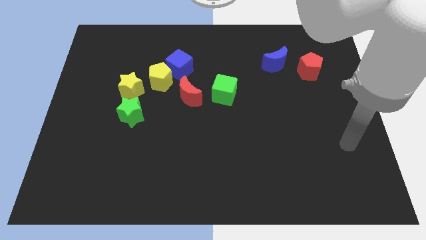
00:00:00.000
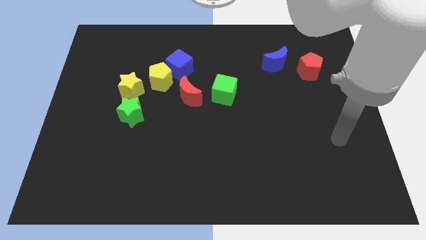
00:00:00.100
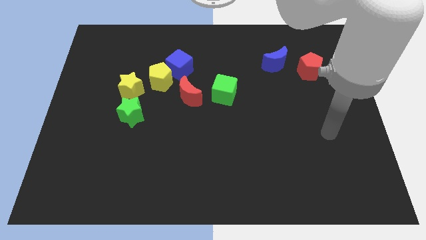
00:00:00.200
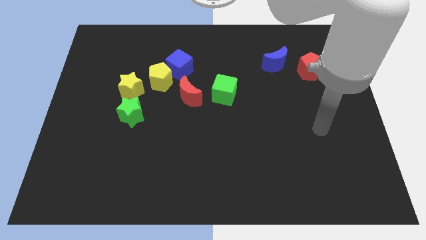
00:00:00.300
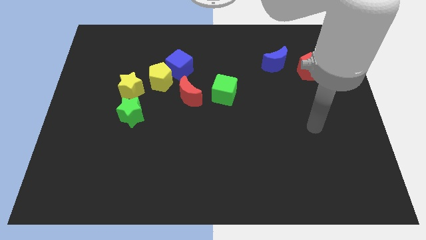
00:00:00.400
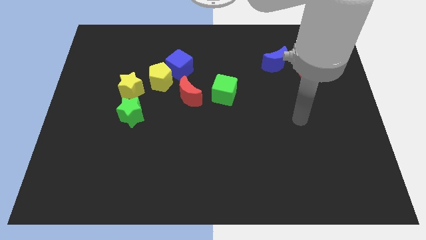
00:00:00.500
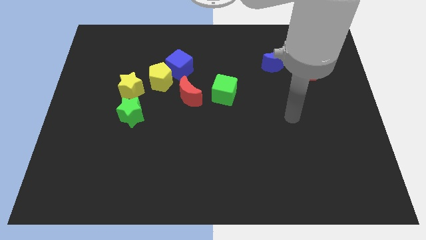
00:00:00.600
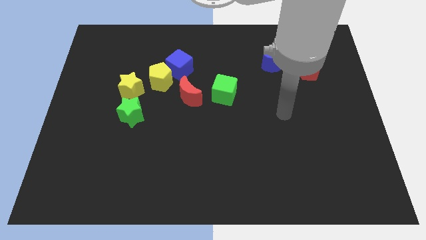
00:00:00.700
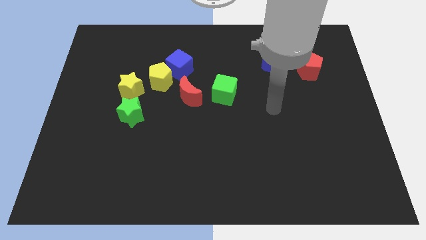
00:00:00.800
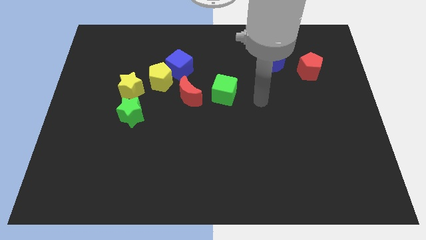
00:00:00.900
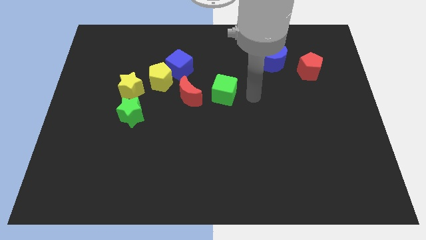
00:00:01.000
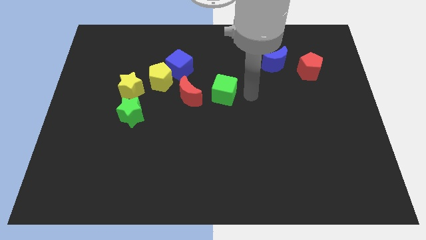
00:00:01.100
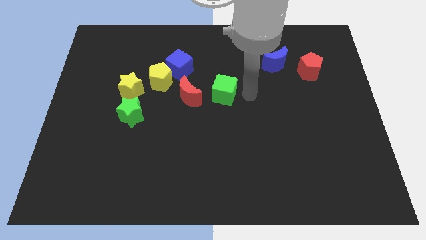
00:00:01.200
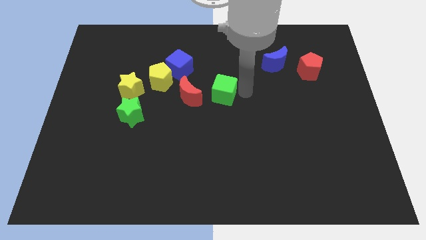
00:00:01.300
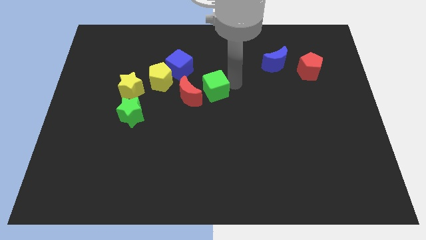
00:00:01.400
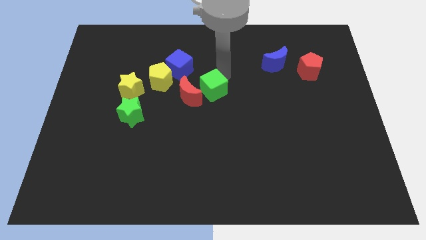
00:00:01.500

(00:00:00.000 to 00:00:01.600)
move the green cube slightly to the left

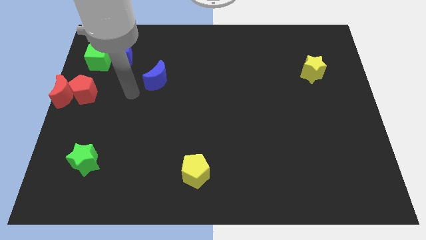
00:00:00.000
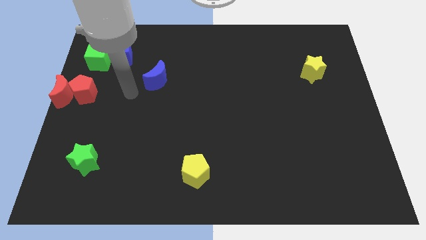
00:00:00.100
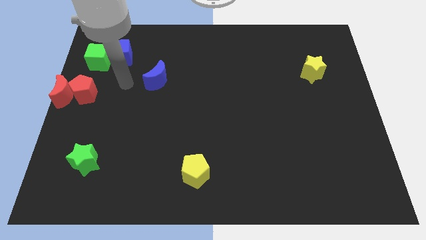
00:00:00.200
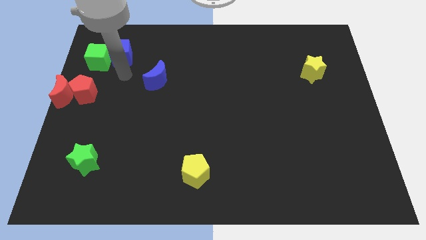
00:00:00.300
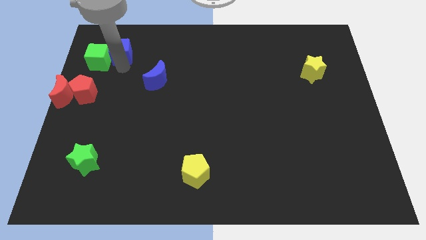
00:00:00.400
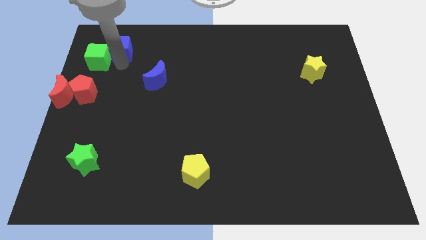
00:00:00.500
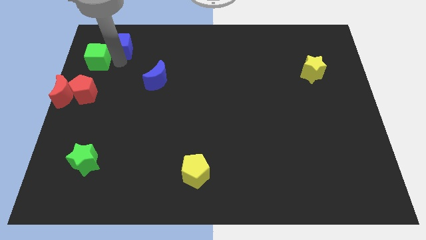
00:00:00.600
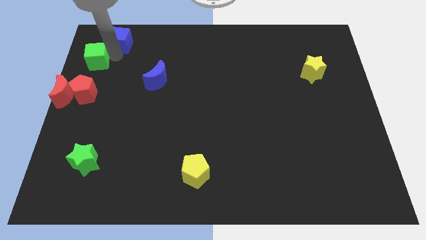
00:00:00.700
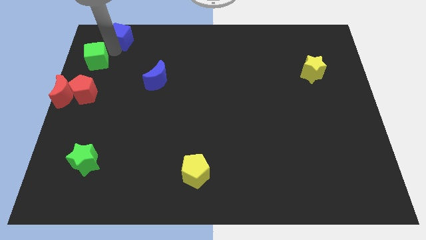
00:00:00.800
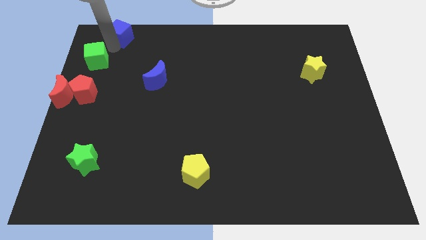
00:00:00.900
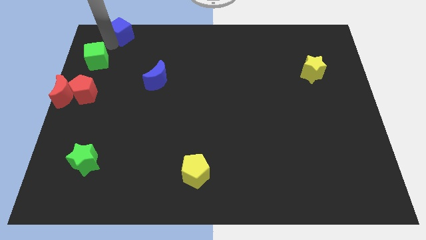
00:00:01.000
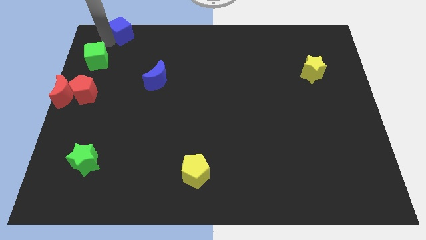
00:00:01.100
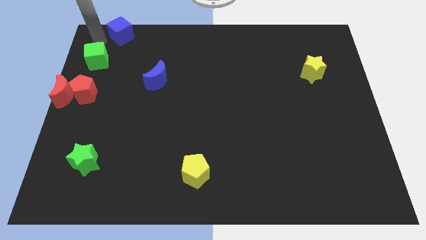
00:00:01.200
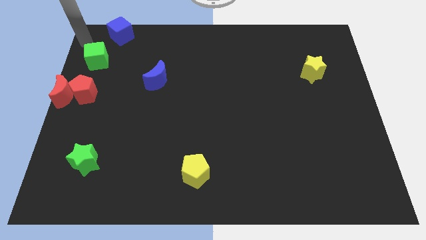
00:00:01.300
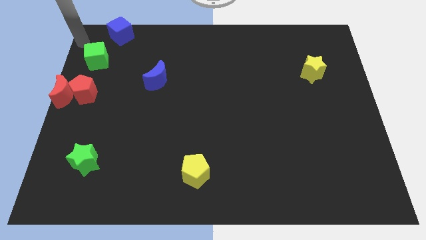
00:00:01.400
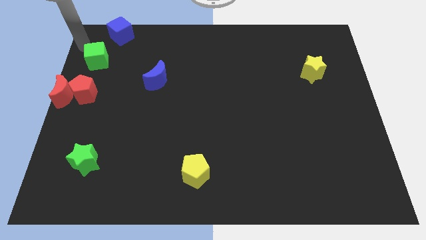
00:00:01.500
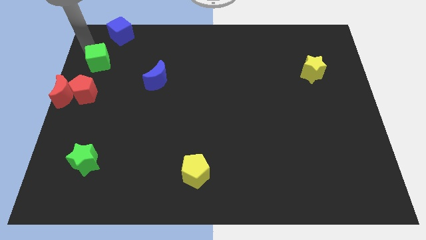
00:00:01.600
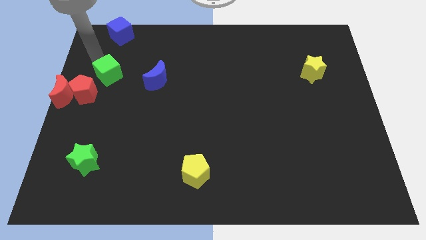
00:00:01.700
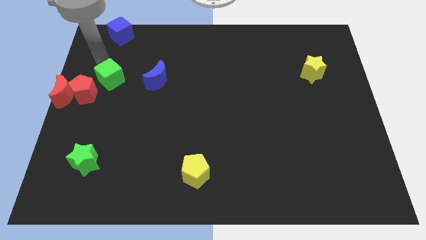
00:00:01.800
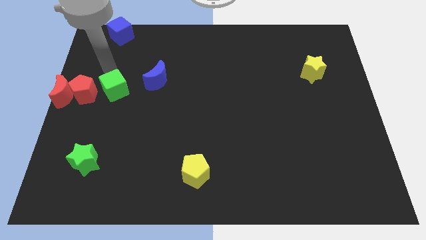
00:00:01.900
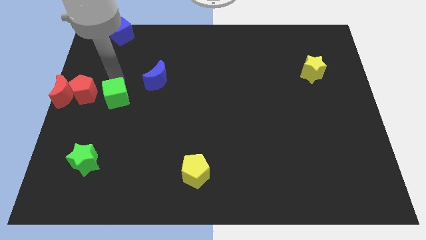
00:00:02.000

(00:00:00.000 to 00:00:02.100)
separate green block from the blue block

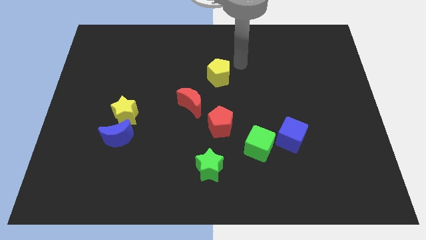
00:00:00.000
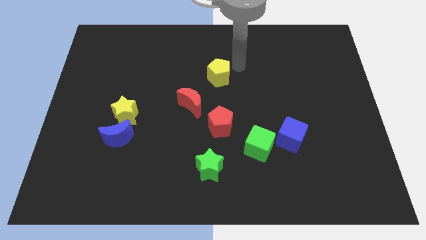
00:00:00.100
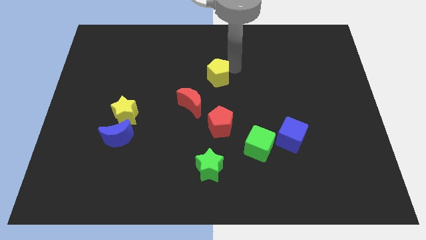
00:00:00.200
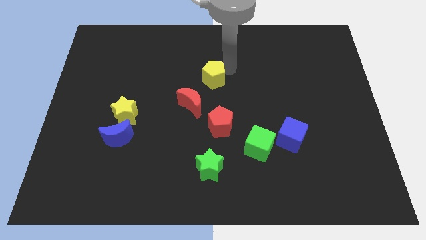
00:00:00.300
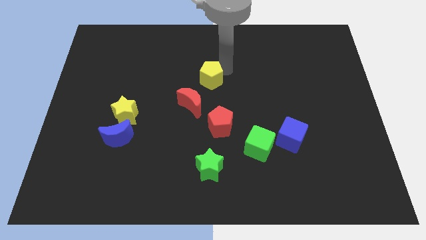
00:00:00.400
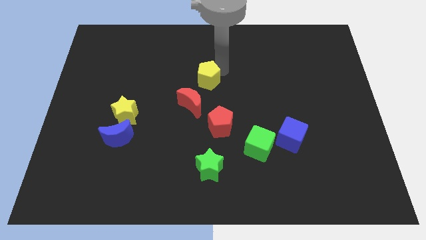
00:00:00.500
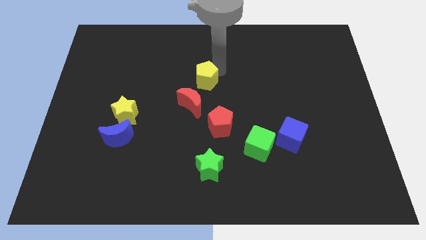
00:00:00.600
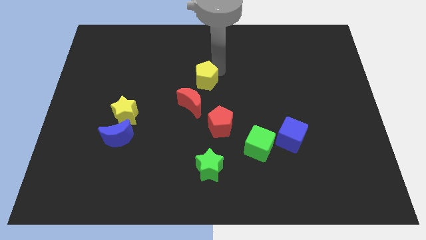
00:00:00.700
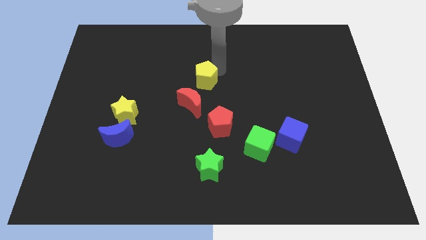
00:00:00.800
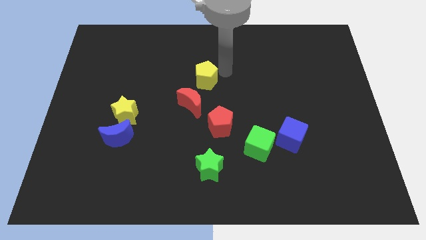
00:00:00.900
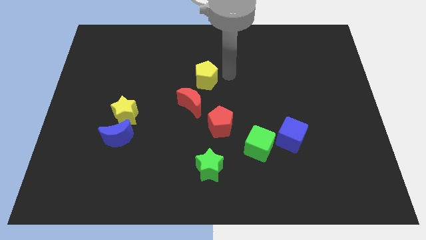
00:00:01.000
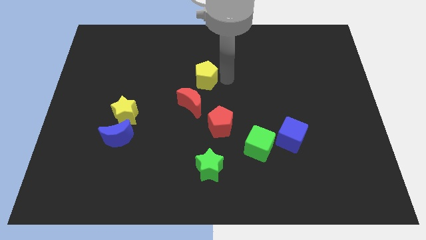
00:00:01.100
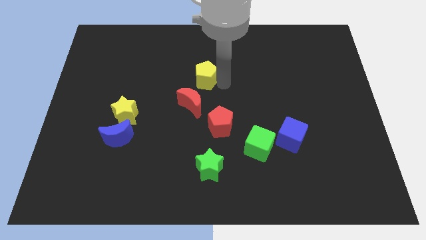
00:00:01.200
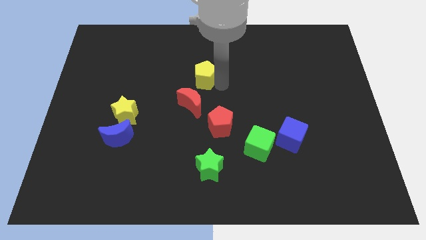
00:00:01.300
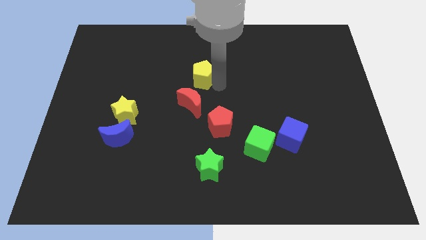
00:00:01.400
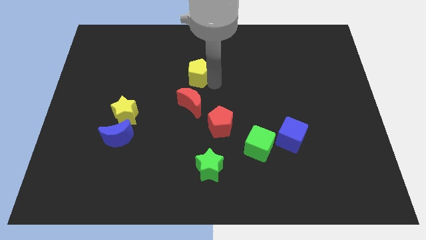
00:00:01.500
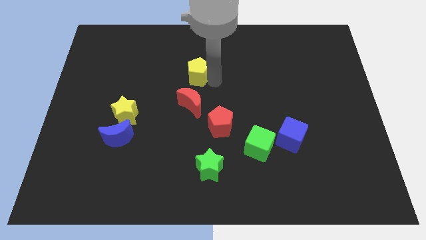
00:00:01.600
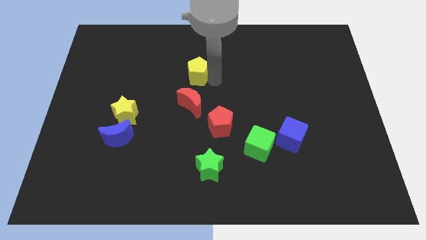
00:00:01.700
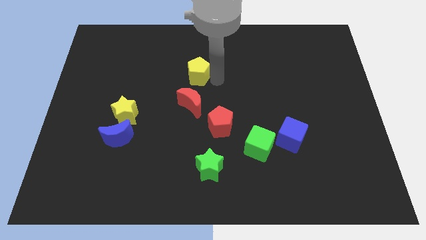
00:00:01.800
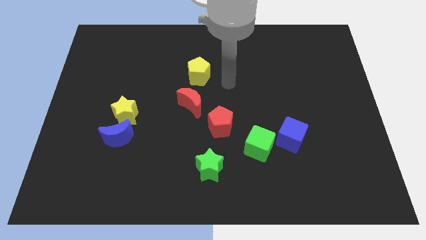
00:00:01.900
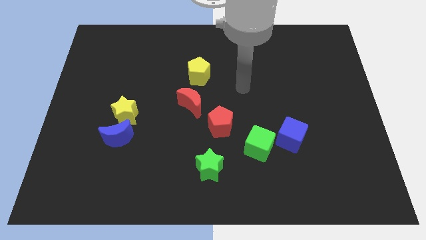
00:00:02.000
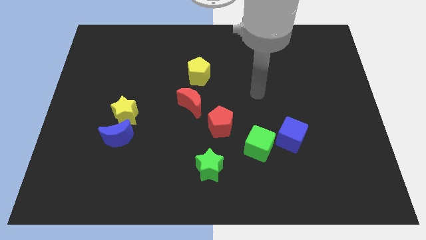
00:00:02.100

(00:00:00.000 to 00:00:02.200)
place the yellow pentagon on top of the red crescent

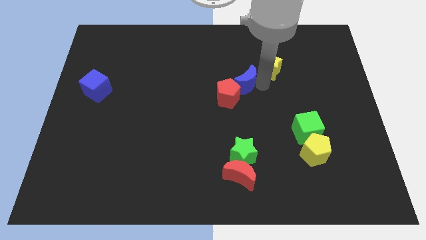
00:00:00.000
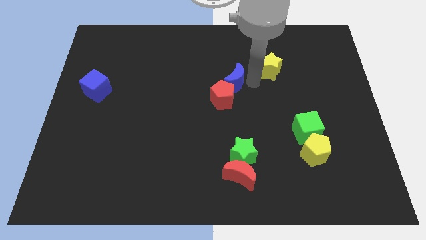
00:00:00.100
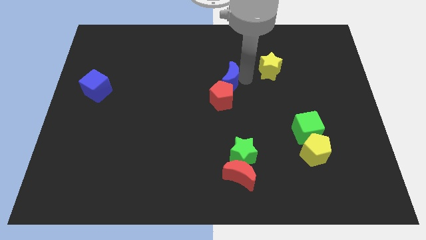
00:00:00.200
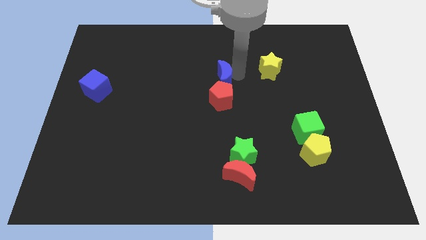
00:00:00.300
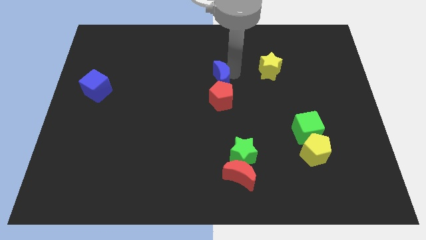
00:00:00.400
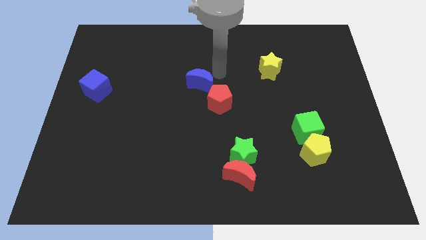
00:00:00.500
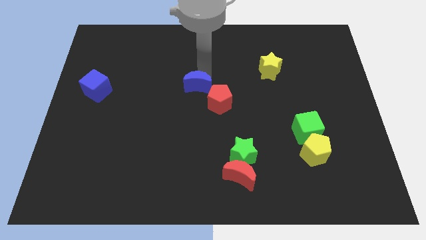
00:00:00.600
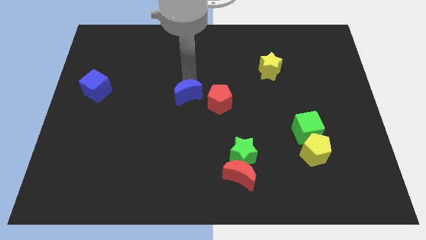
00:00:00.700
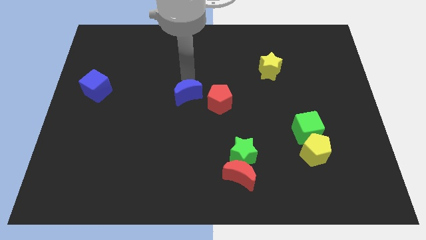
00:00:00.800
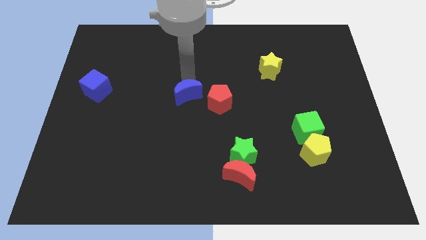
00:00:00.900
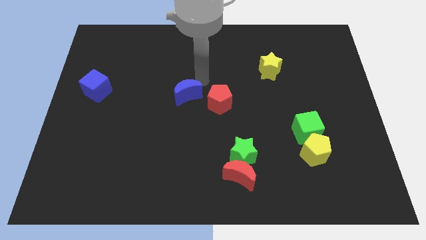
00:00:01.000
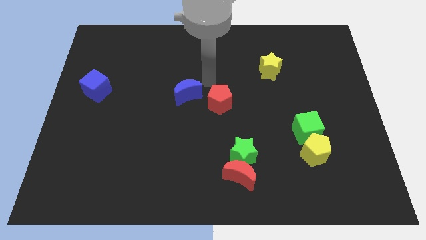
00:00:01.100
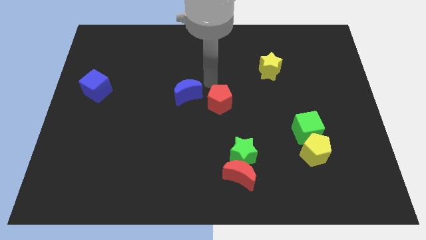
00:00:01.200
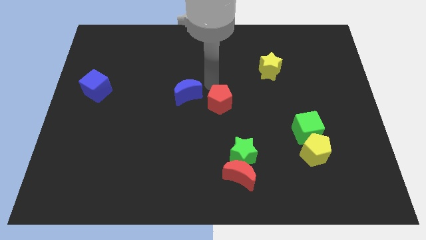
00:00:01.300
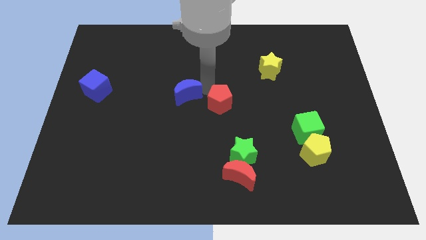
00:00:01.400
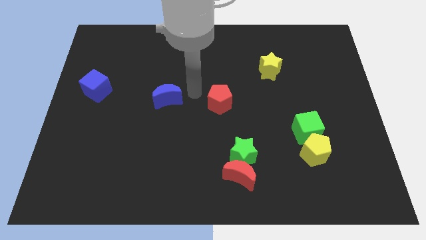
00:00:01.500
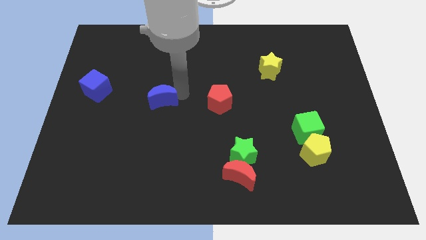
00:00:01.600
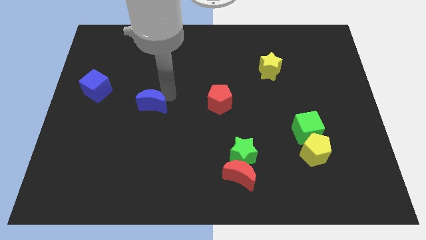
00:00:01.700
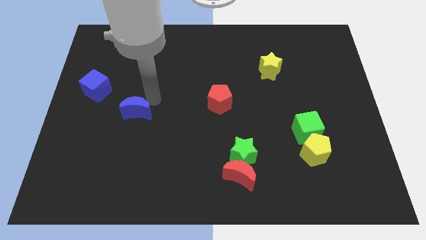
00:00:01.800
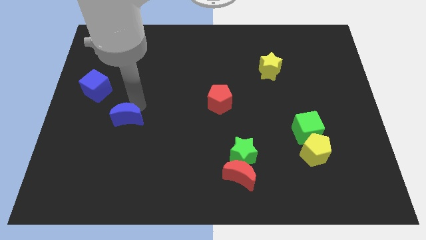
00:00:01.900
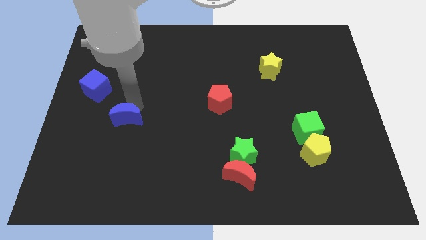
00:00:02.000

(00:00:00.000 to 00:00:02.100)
separate the blue crescent from red pentagon

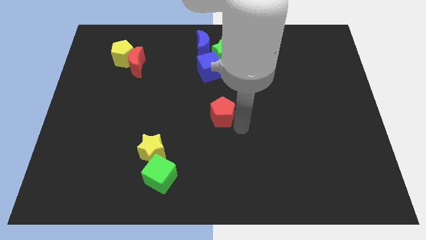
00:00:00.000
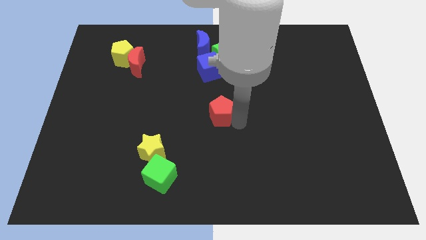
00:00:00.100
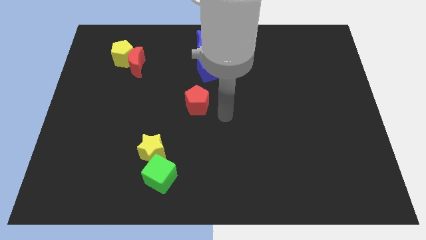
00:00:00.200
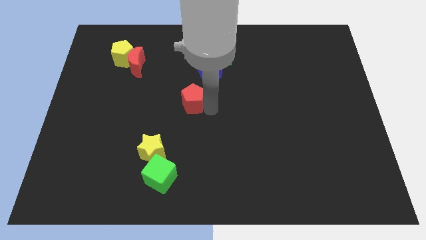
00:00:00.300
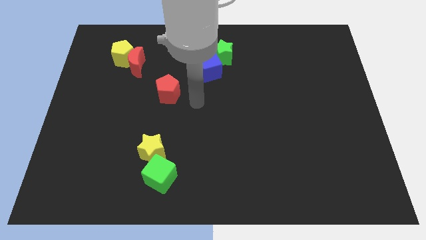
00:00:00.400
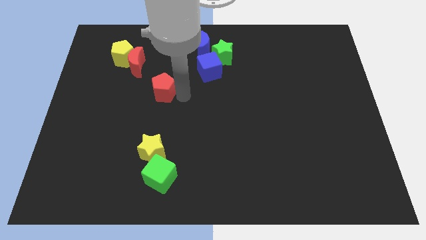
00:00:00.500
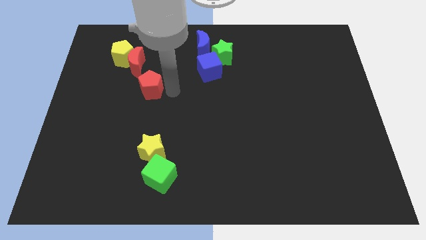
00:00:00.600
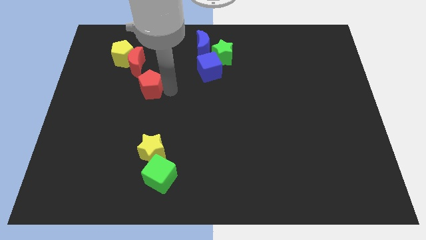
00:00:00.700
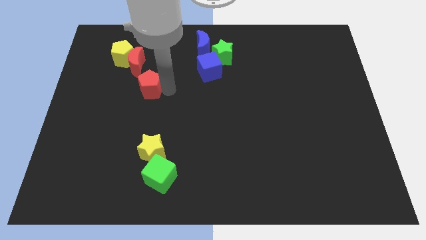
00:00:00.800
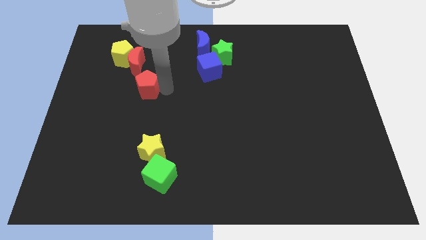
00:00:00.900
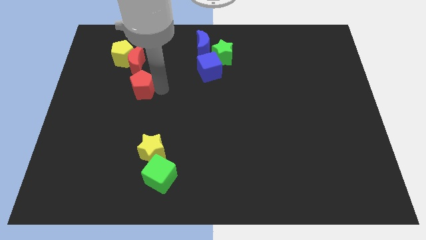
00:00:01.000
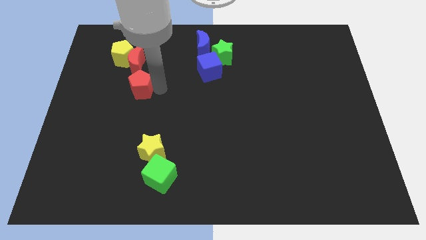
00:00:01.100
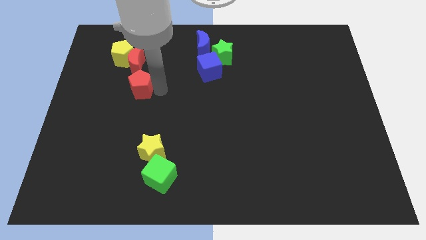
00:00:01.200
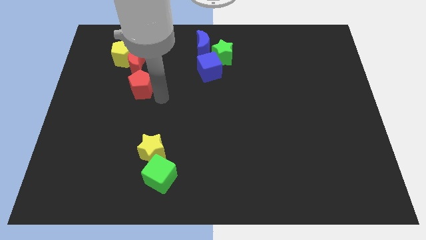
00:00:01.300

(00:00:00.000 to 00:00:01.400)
place the red pentagon below the red moon
